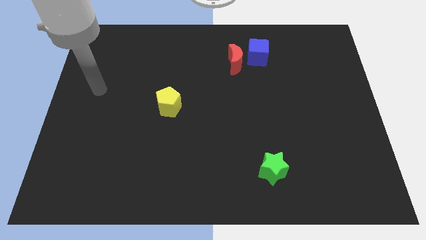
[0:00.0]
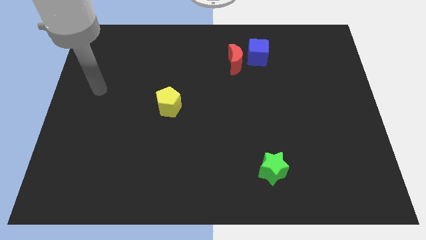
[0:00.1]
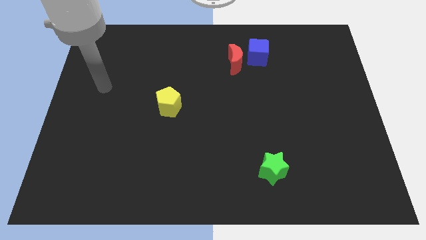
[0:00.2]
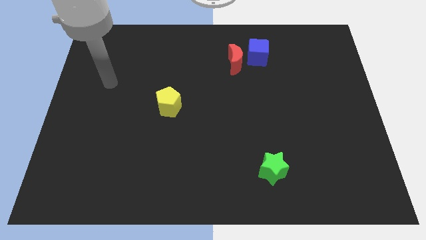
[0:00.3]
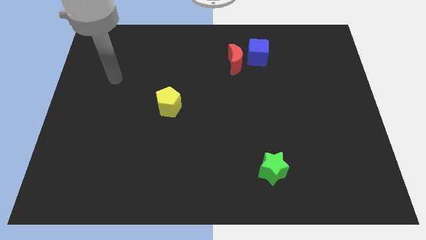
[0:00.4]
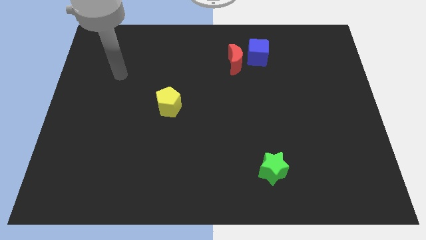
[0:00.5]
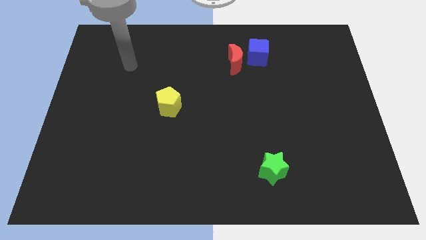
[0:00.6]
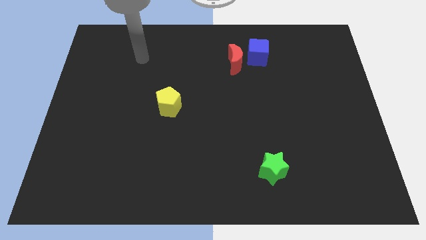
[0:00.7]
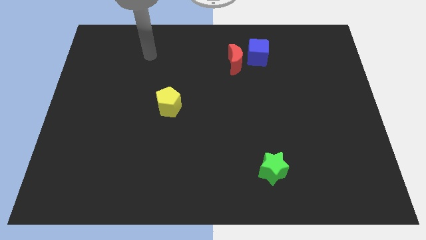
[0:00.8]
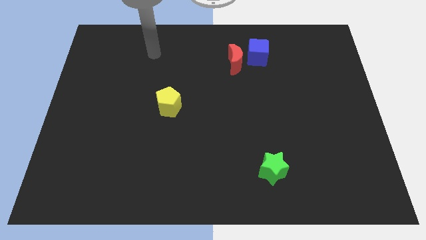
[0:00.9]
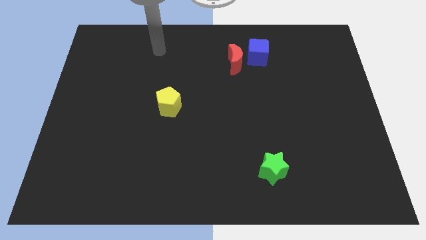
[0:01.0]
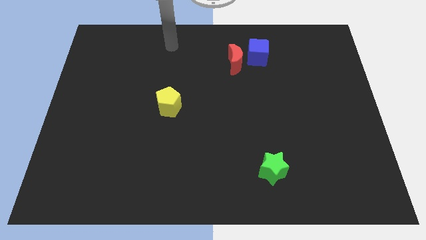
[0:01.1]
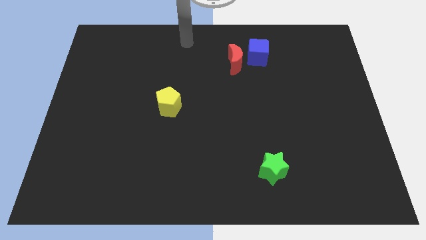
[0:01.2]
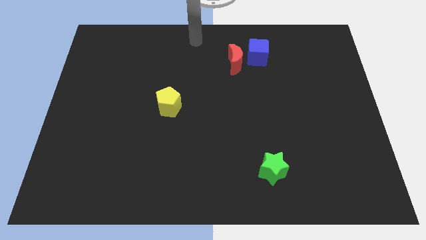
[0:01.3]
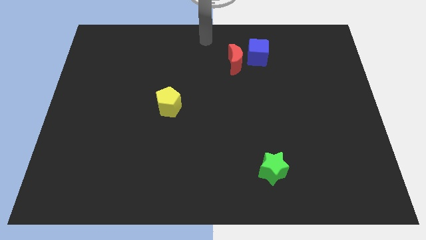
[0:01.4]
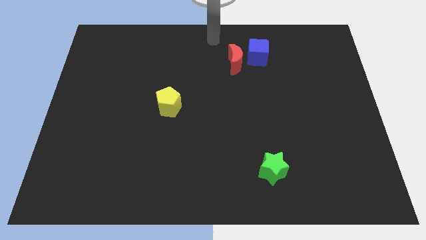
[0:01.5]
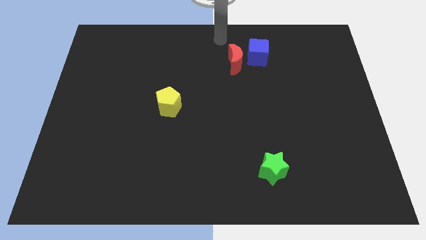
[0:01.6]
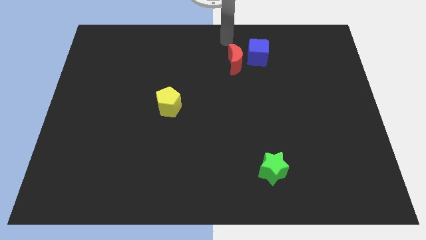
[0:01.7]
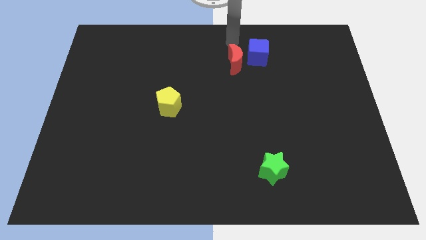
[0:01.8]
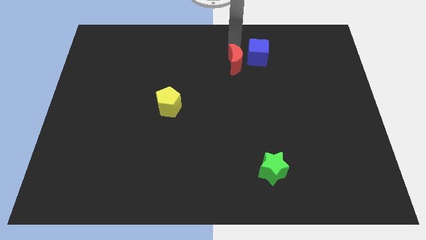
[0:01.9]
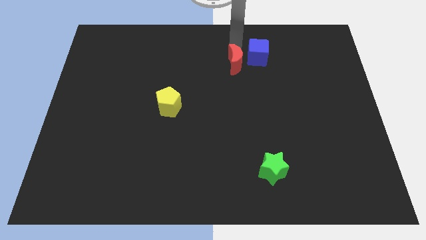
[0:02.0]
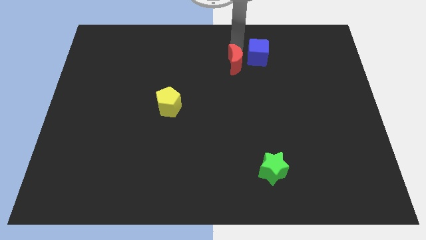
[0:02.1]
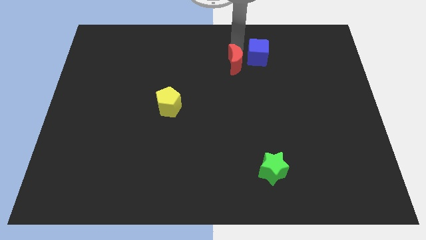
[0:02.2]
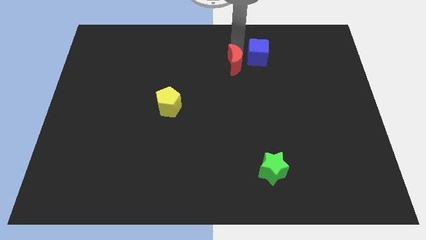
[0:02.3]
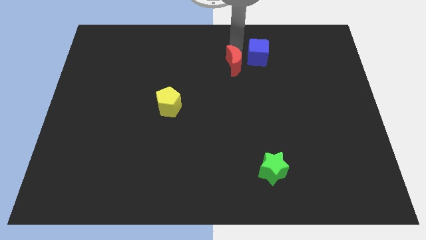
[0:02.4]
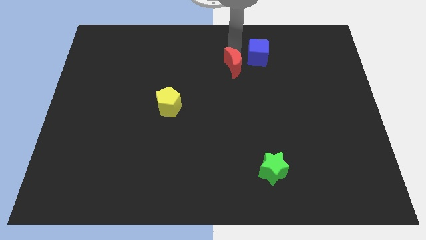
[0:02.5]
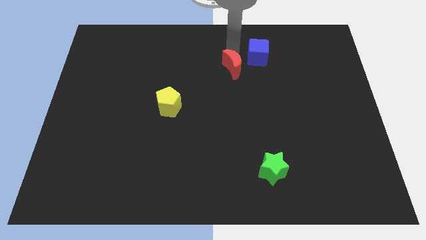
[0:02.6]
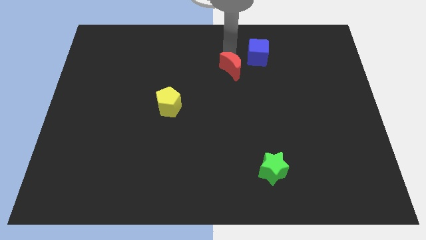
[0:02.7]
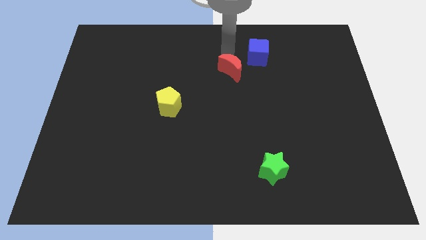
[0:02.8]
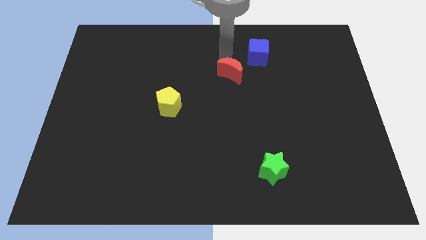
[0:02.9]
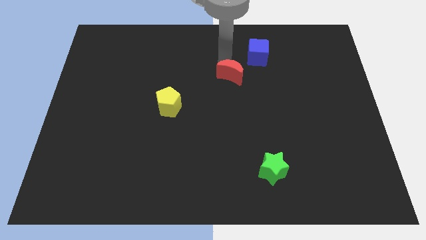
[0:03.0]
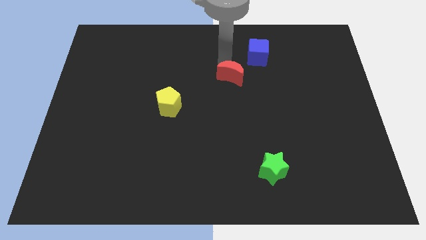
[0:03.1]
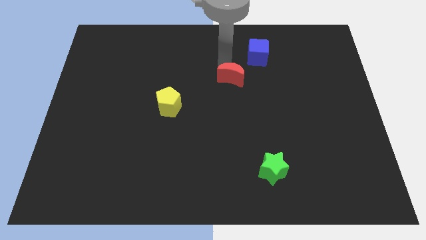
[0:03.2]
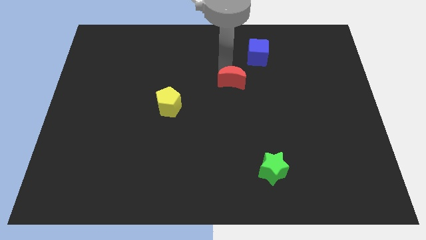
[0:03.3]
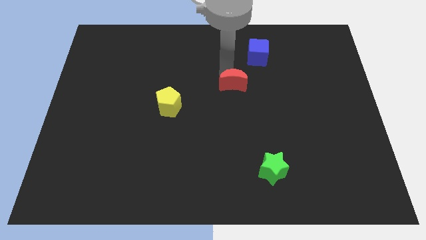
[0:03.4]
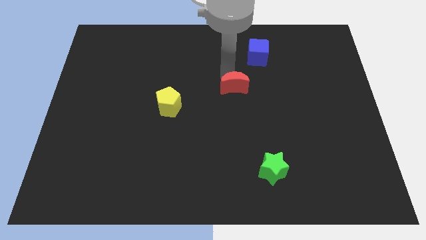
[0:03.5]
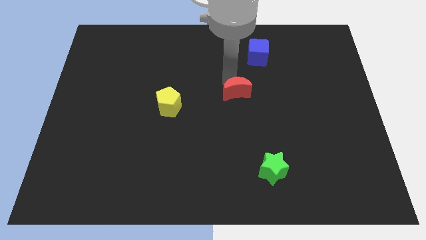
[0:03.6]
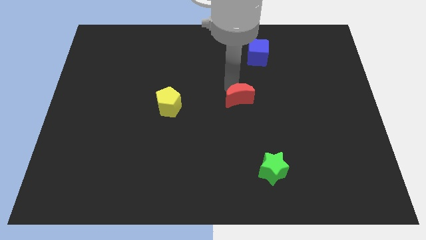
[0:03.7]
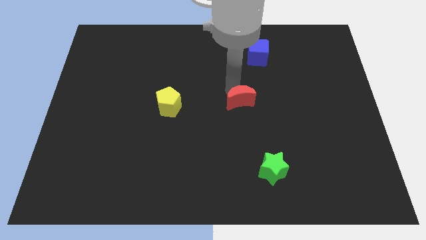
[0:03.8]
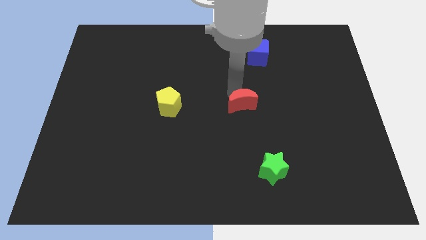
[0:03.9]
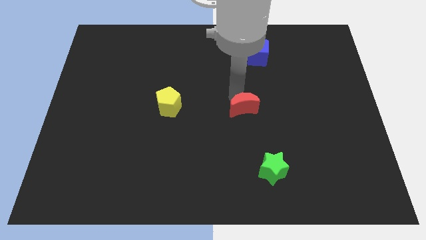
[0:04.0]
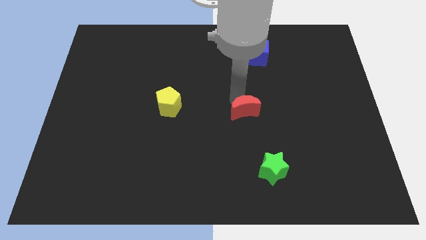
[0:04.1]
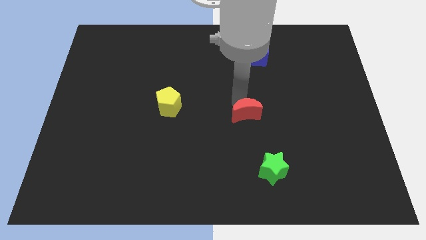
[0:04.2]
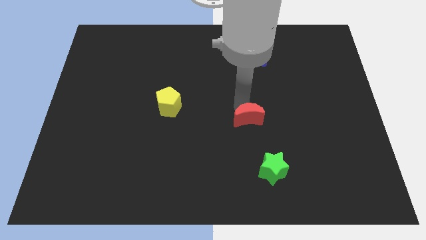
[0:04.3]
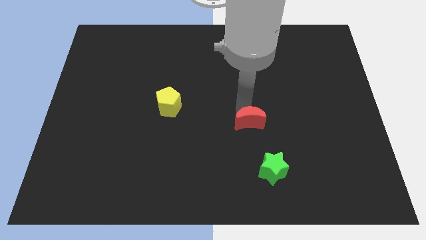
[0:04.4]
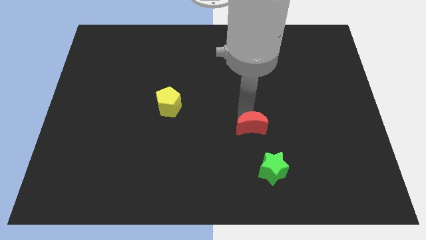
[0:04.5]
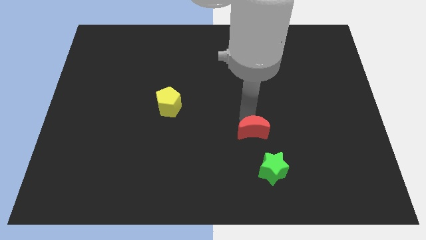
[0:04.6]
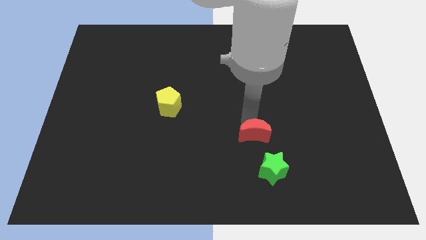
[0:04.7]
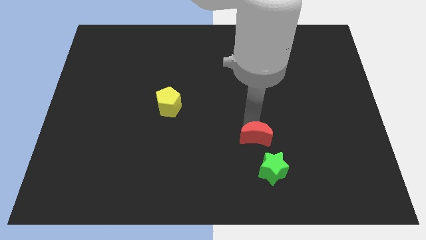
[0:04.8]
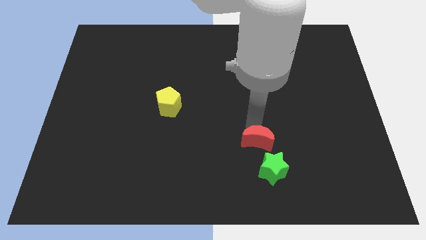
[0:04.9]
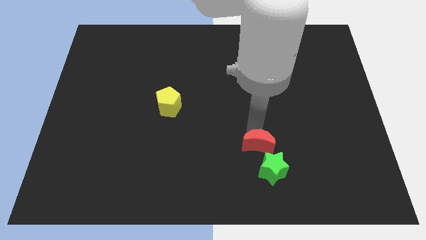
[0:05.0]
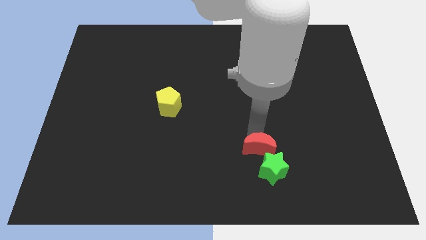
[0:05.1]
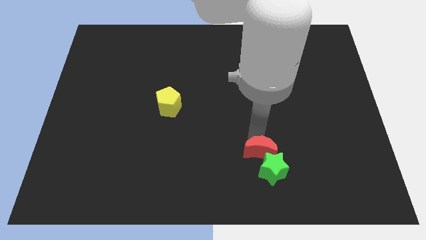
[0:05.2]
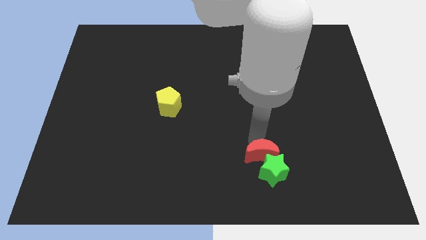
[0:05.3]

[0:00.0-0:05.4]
move the red moon to the green star

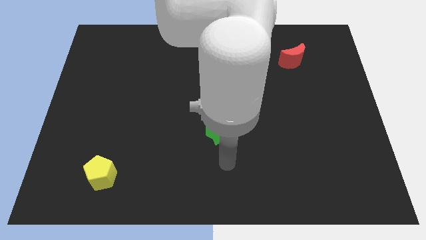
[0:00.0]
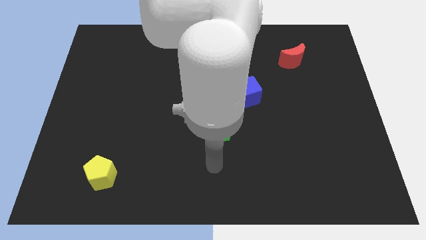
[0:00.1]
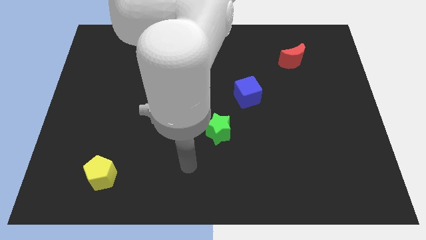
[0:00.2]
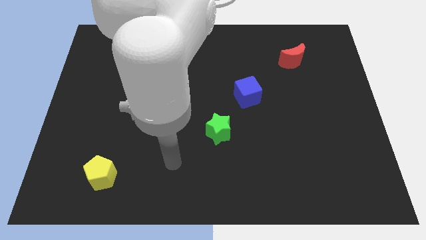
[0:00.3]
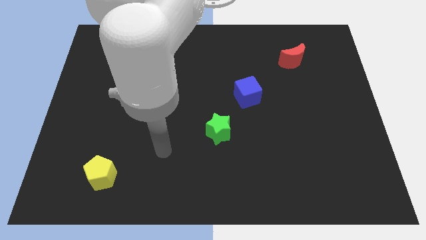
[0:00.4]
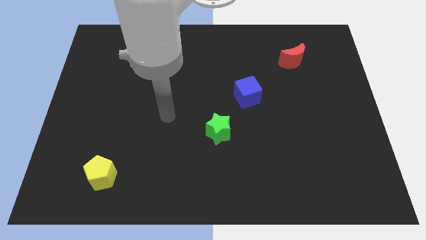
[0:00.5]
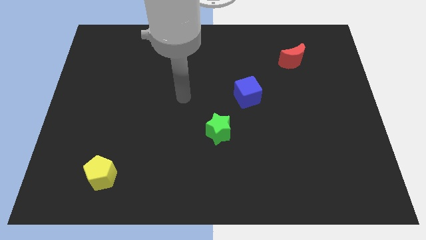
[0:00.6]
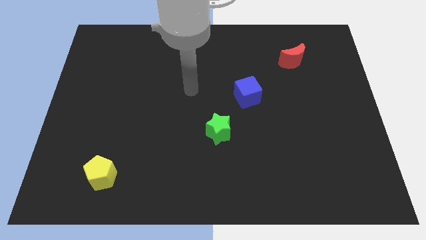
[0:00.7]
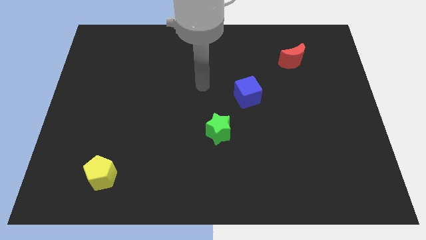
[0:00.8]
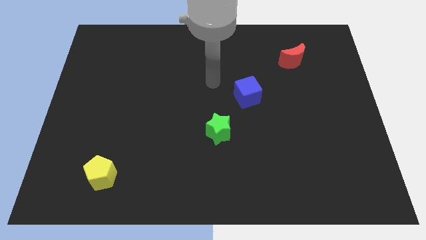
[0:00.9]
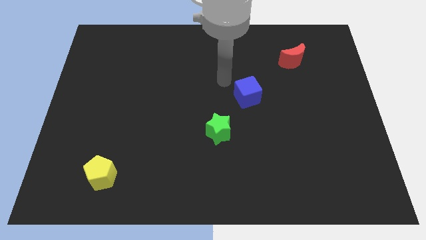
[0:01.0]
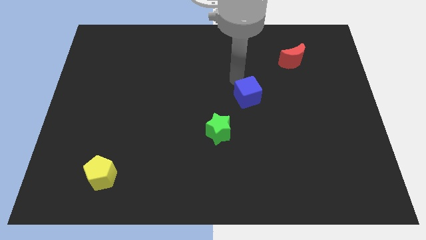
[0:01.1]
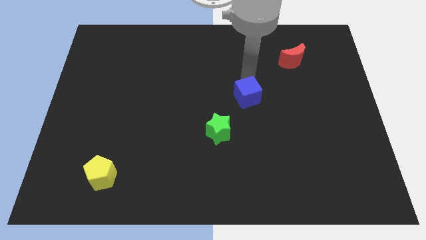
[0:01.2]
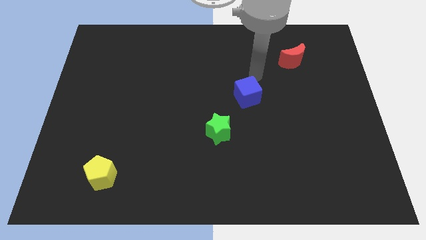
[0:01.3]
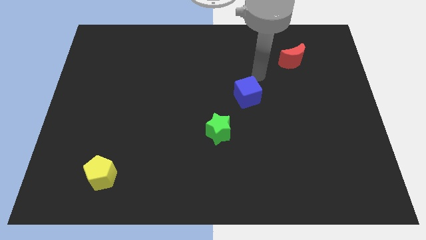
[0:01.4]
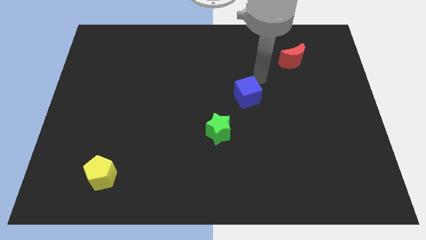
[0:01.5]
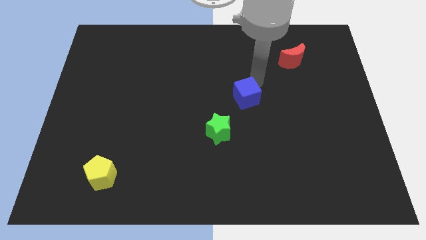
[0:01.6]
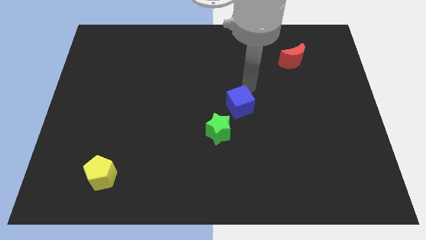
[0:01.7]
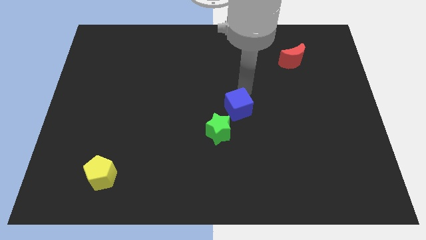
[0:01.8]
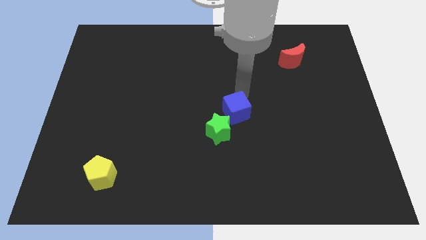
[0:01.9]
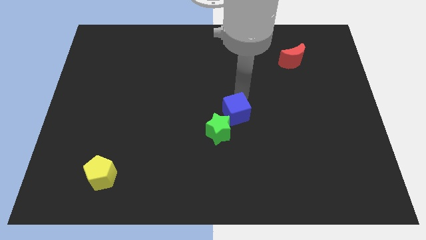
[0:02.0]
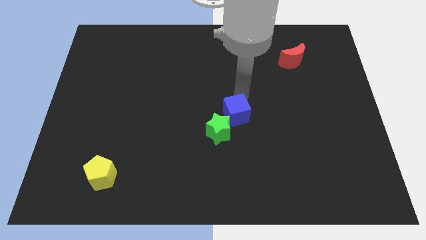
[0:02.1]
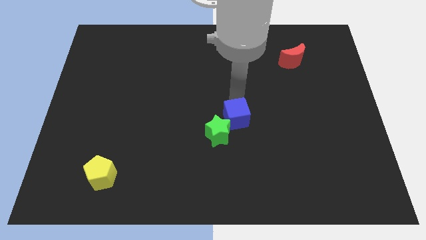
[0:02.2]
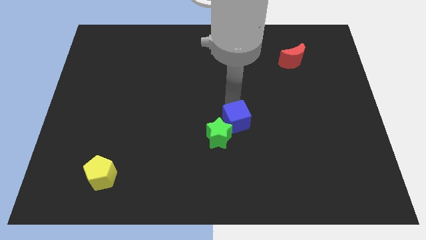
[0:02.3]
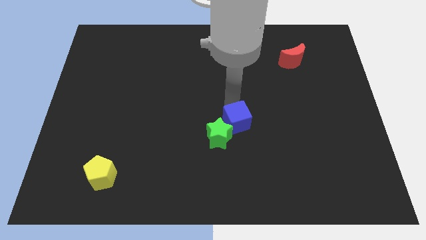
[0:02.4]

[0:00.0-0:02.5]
push the blue cube towards the green block

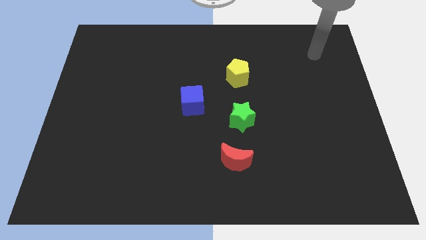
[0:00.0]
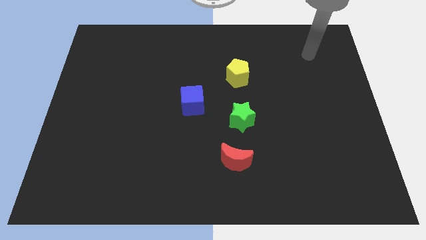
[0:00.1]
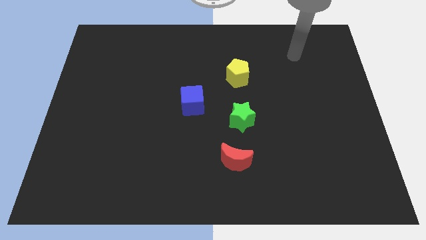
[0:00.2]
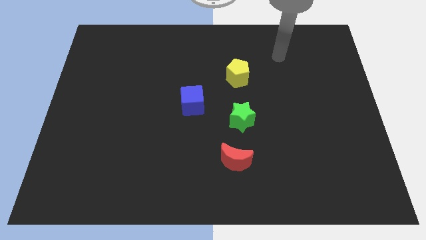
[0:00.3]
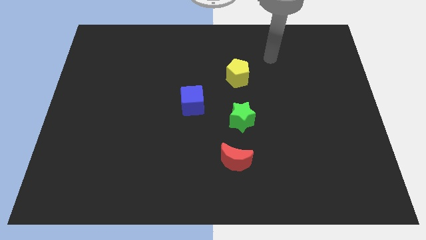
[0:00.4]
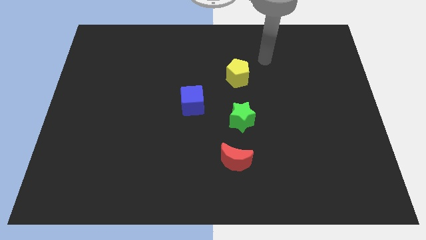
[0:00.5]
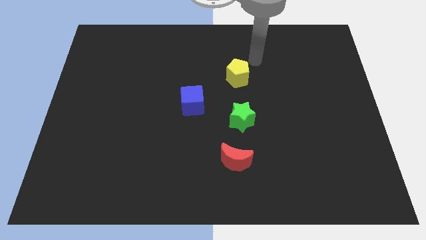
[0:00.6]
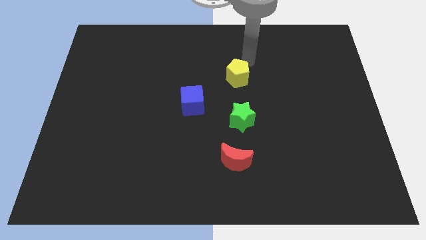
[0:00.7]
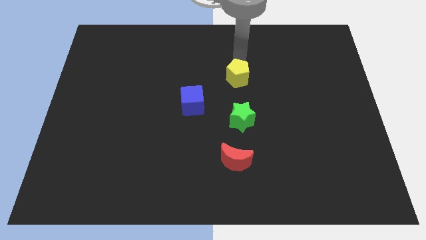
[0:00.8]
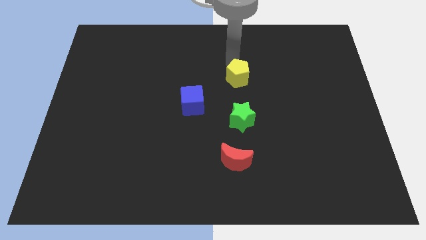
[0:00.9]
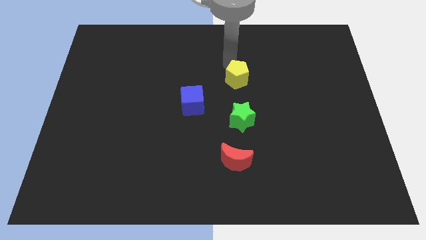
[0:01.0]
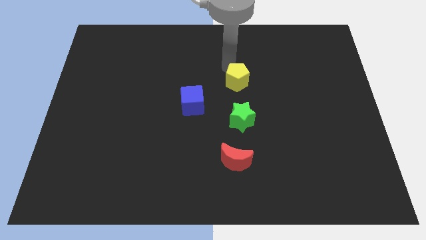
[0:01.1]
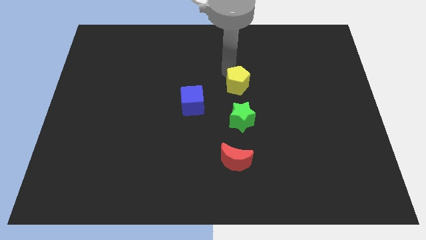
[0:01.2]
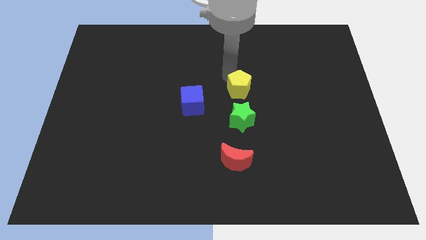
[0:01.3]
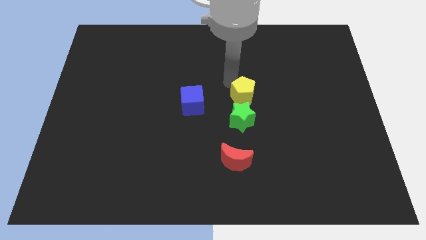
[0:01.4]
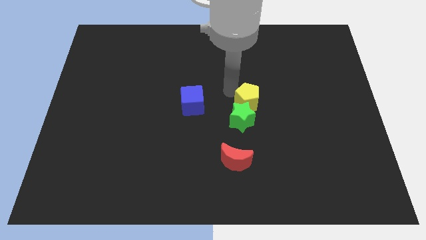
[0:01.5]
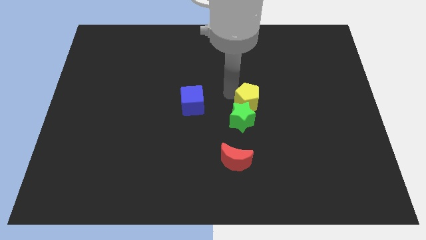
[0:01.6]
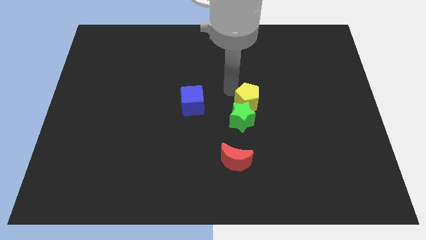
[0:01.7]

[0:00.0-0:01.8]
slide the pentagon close to the star
